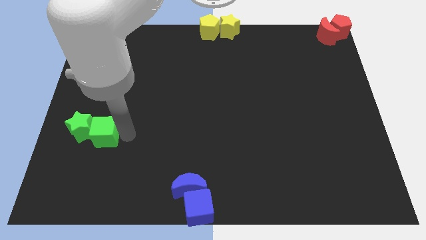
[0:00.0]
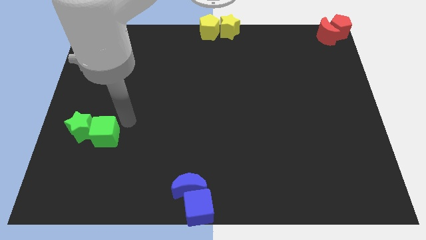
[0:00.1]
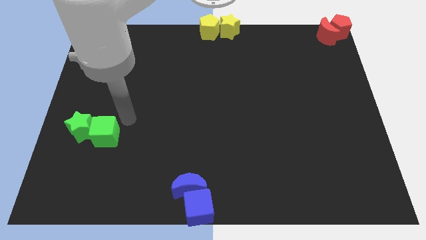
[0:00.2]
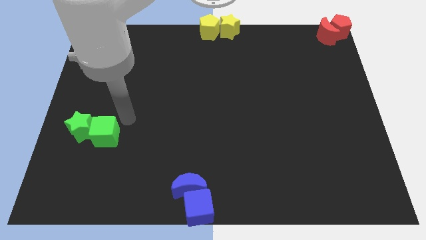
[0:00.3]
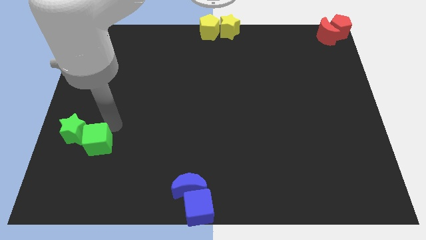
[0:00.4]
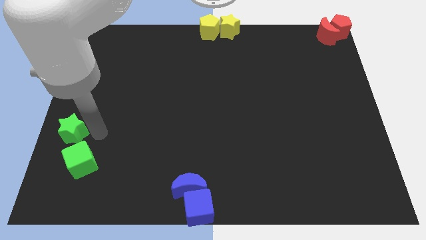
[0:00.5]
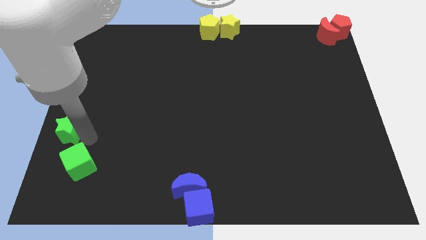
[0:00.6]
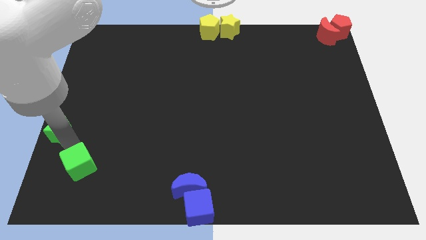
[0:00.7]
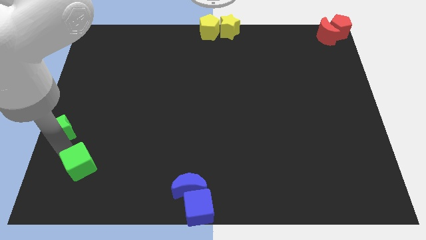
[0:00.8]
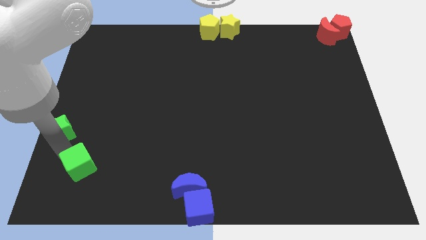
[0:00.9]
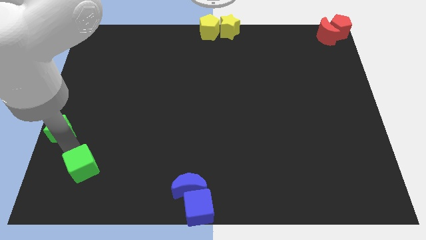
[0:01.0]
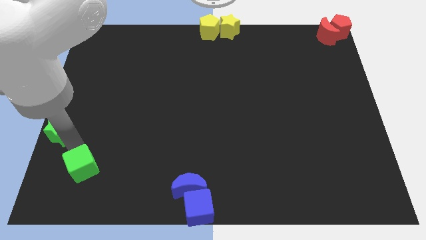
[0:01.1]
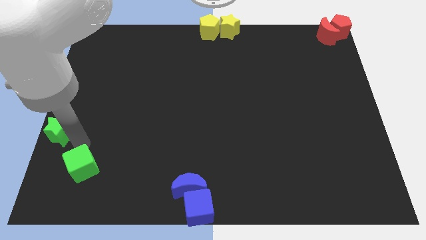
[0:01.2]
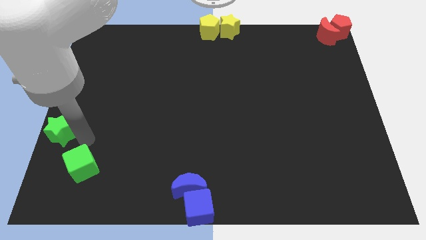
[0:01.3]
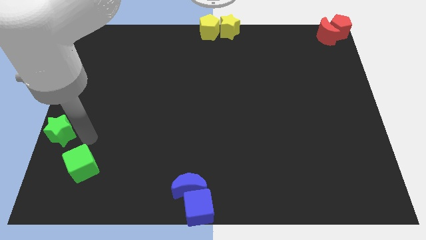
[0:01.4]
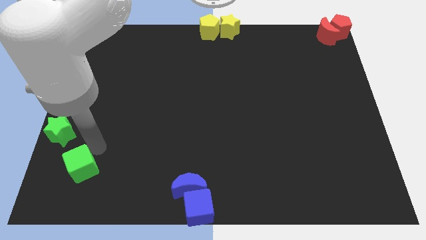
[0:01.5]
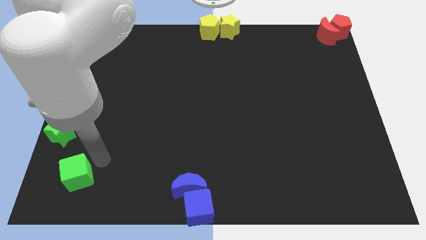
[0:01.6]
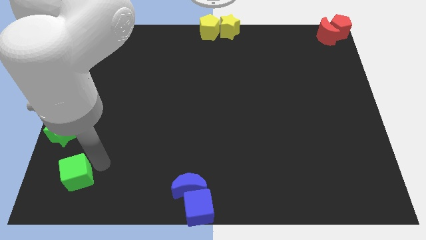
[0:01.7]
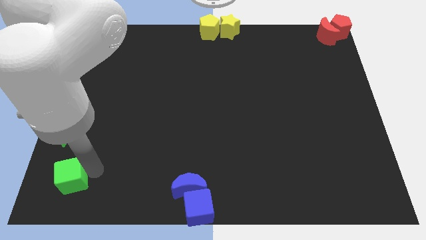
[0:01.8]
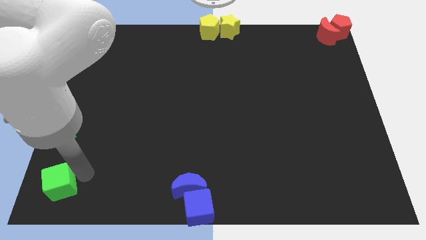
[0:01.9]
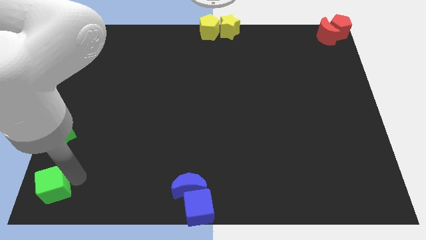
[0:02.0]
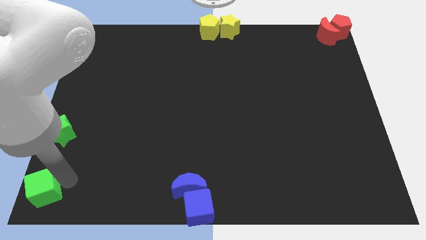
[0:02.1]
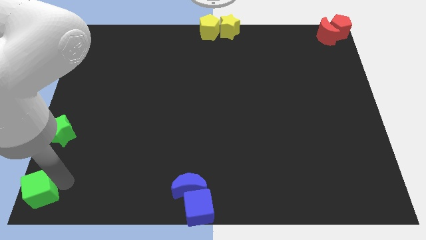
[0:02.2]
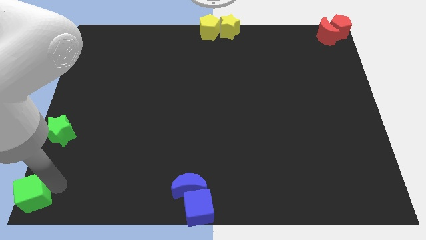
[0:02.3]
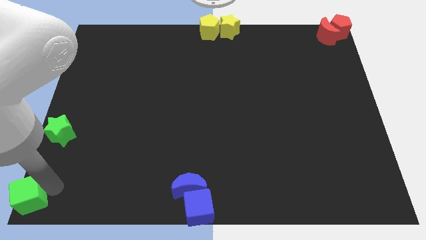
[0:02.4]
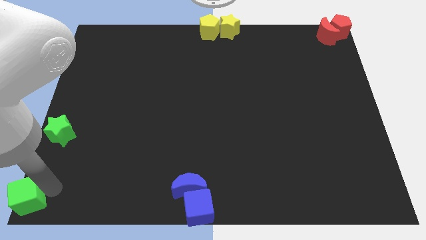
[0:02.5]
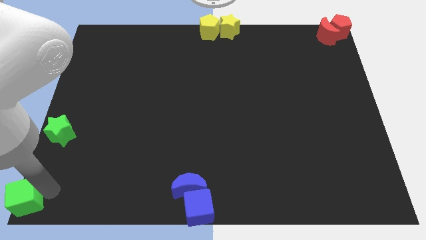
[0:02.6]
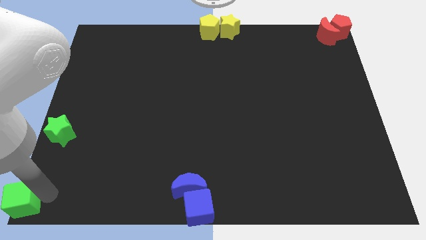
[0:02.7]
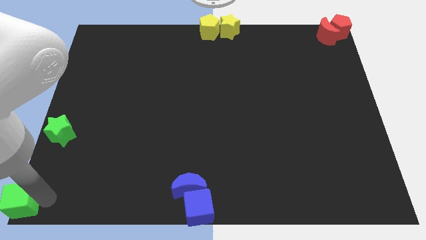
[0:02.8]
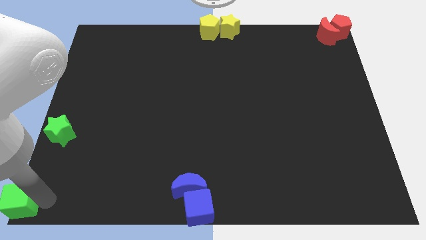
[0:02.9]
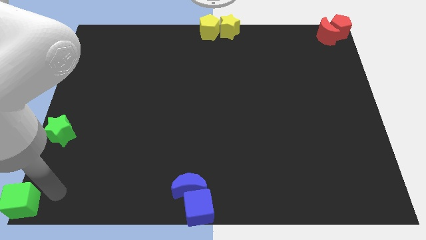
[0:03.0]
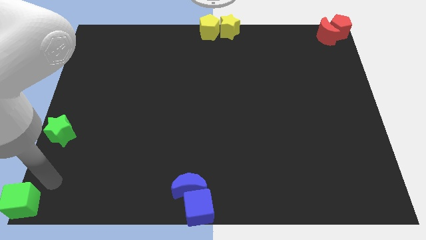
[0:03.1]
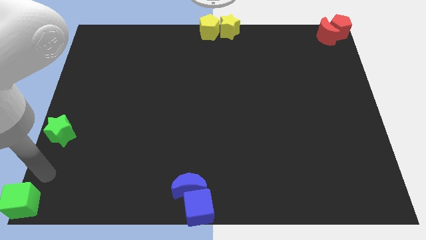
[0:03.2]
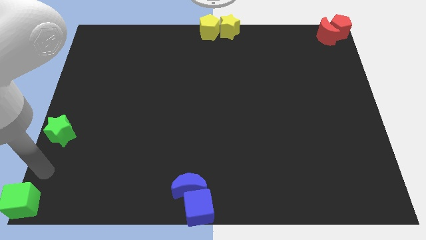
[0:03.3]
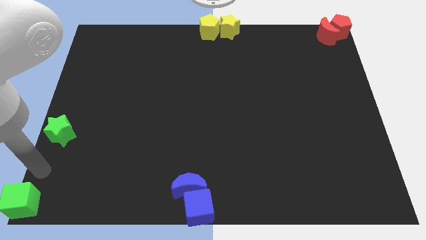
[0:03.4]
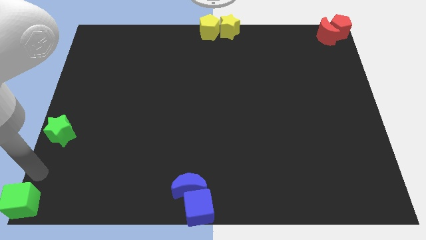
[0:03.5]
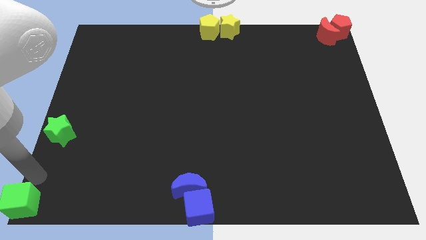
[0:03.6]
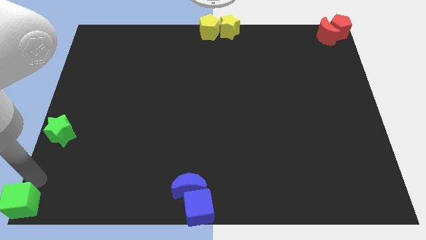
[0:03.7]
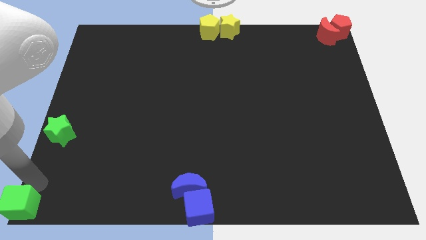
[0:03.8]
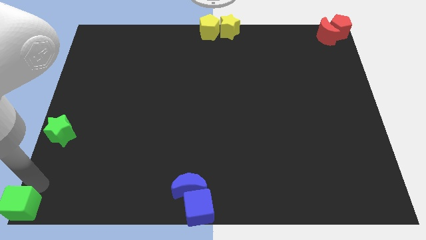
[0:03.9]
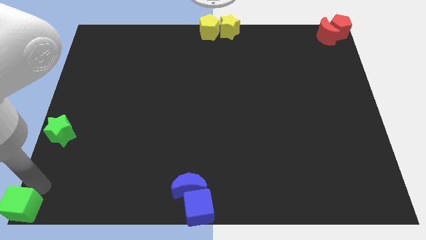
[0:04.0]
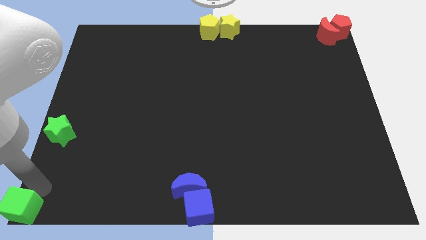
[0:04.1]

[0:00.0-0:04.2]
separate green cube from green star

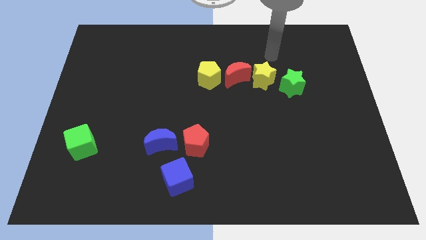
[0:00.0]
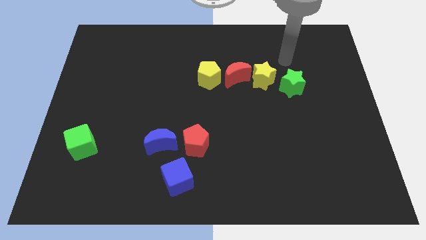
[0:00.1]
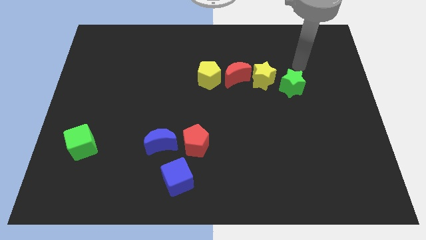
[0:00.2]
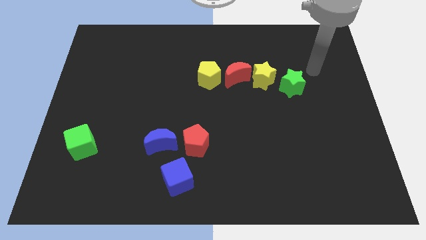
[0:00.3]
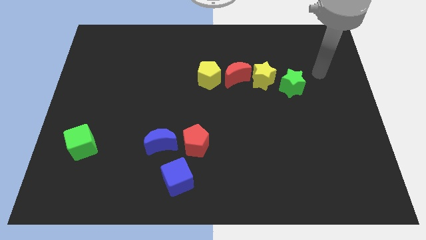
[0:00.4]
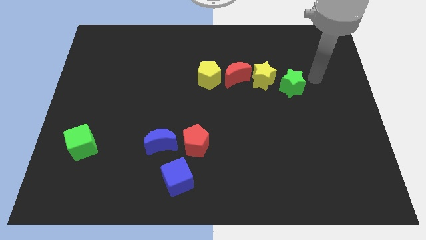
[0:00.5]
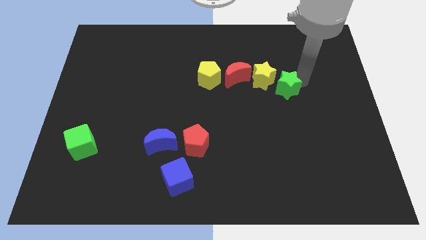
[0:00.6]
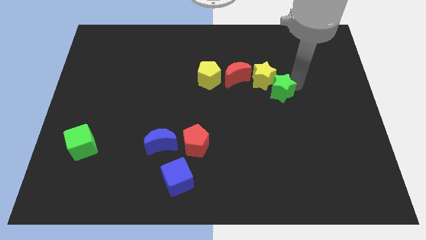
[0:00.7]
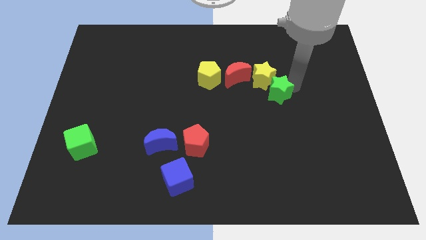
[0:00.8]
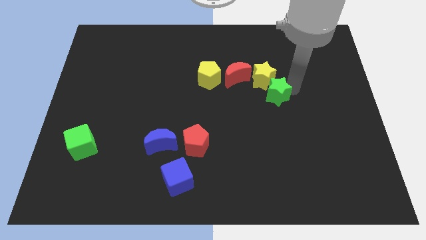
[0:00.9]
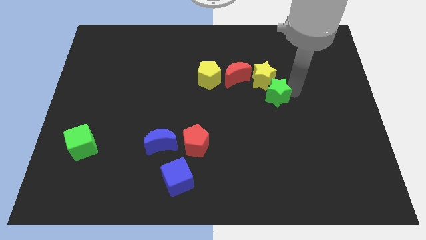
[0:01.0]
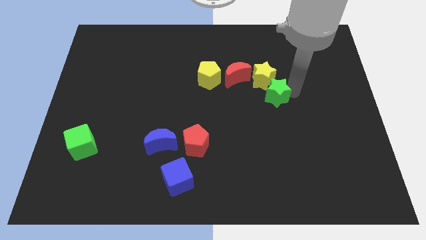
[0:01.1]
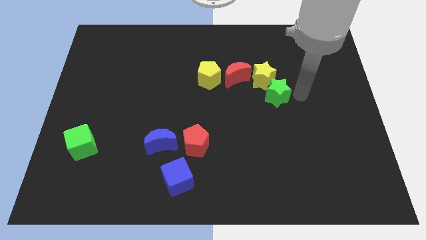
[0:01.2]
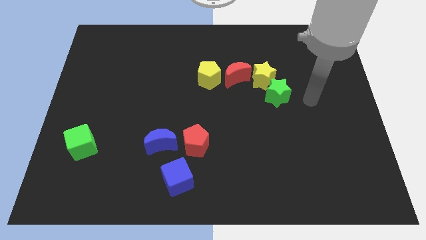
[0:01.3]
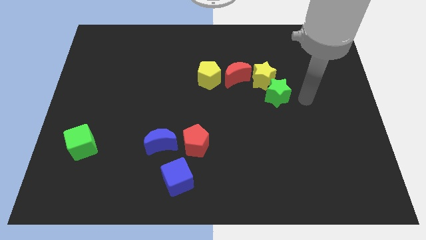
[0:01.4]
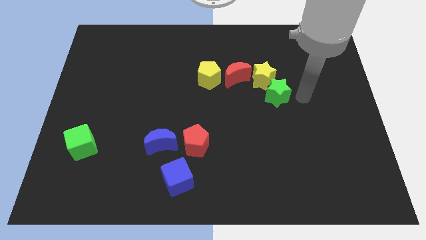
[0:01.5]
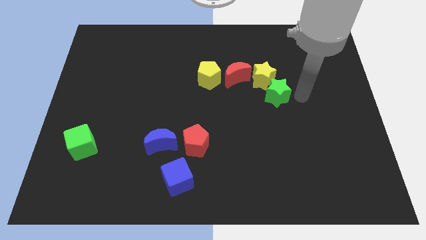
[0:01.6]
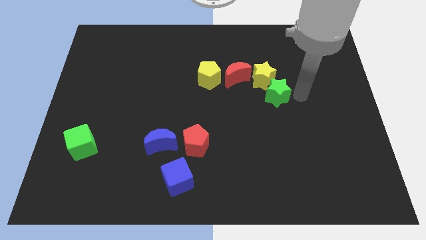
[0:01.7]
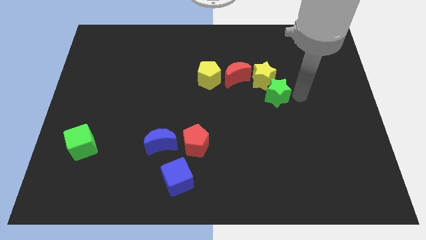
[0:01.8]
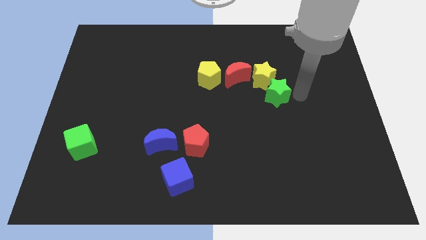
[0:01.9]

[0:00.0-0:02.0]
push the green star downward

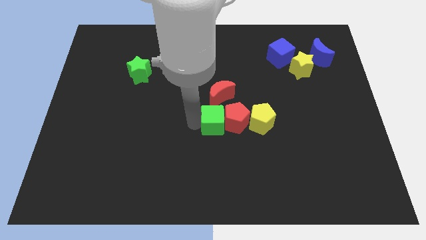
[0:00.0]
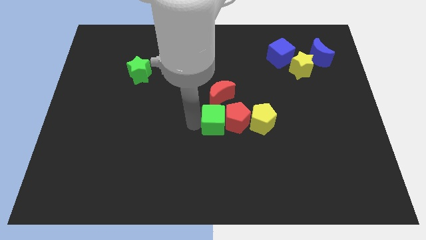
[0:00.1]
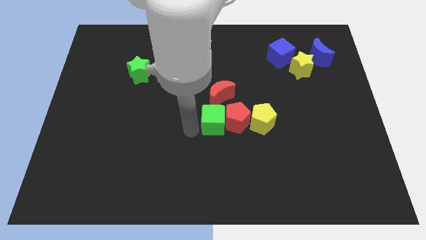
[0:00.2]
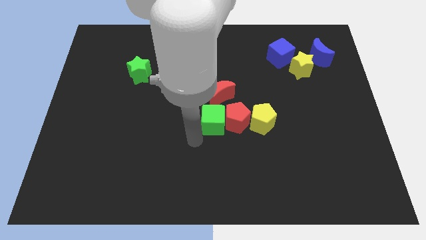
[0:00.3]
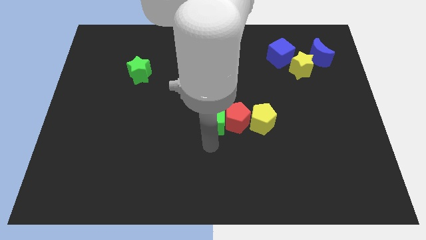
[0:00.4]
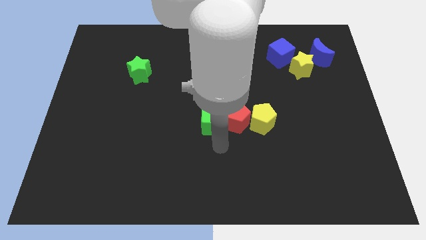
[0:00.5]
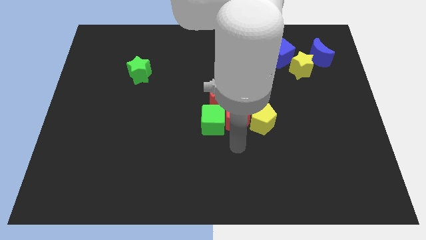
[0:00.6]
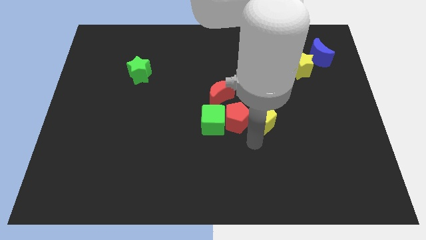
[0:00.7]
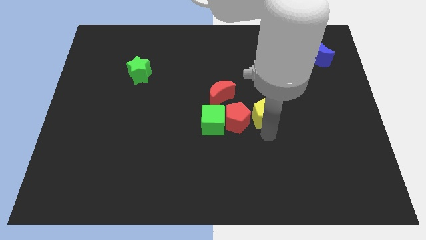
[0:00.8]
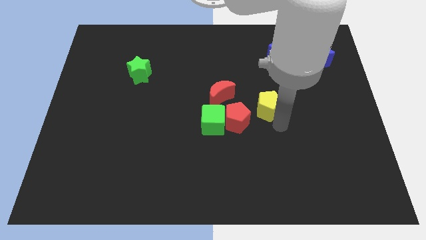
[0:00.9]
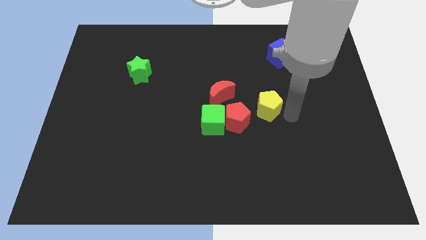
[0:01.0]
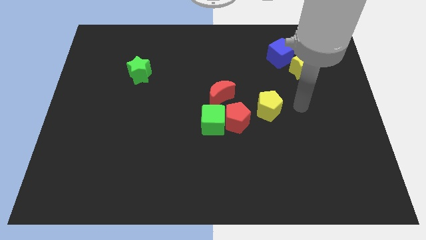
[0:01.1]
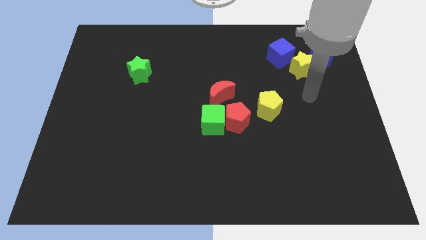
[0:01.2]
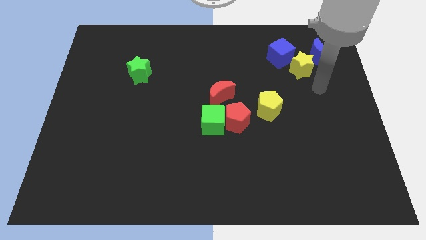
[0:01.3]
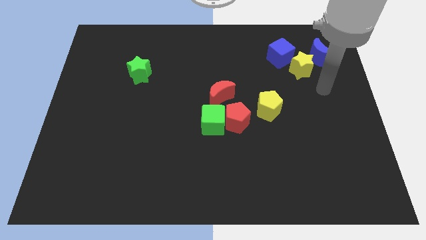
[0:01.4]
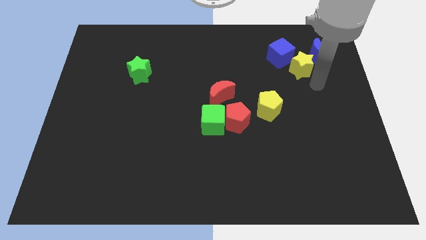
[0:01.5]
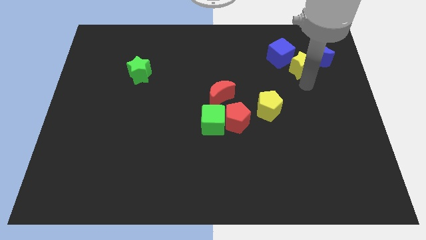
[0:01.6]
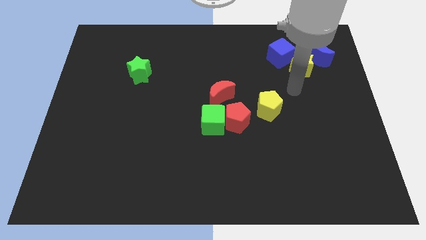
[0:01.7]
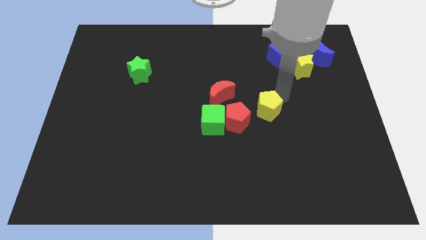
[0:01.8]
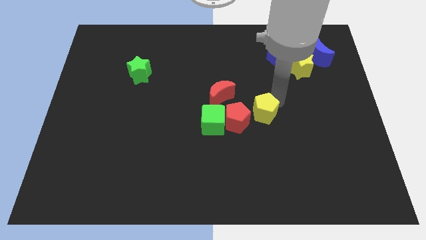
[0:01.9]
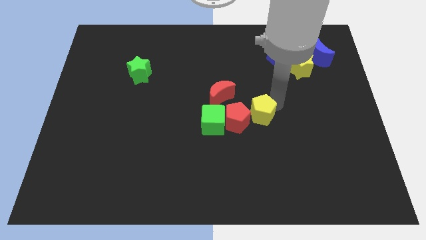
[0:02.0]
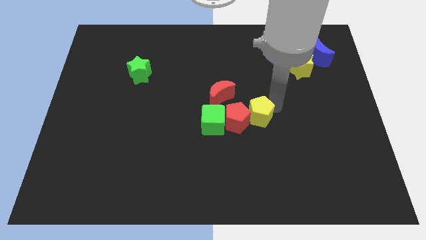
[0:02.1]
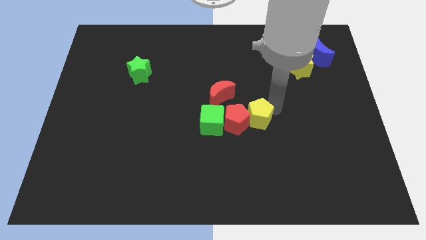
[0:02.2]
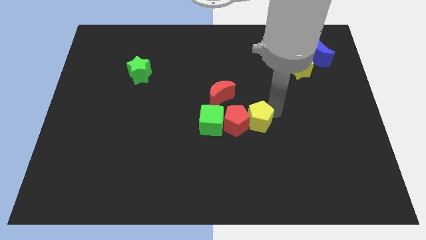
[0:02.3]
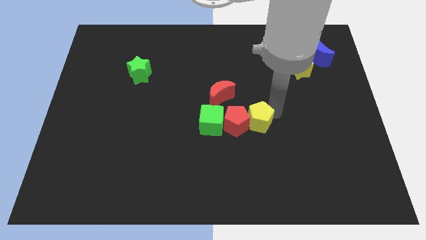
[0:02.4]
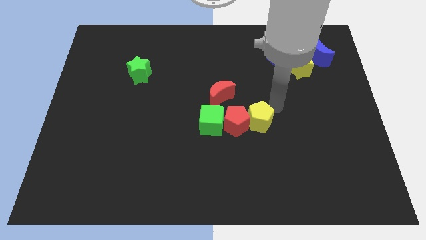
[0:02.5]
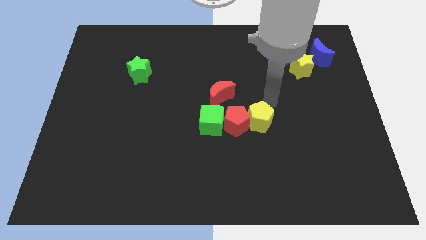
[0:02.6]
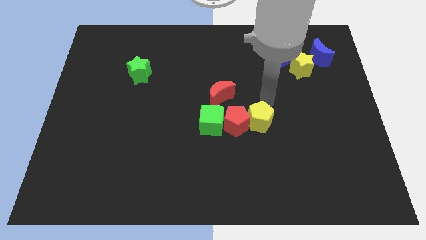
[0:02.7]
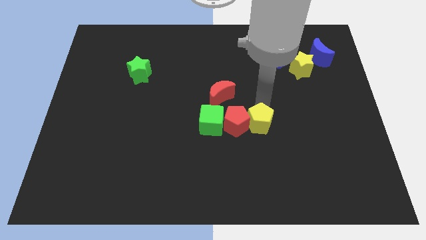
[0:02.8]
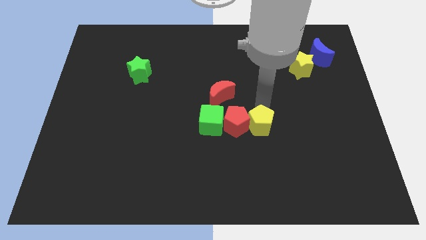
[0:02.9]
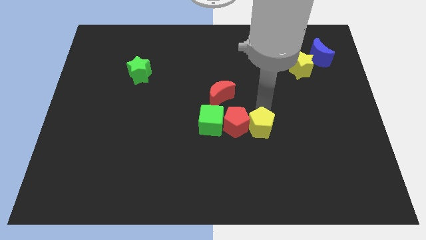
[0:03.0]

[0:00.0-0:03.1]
make a horizontal line out of green cubered pentagon and yellow star
